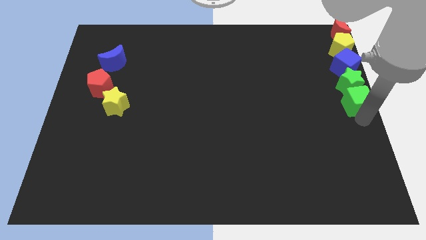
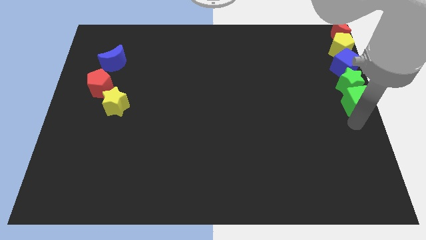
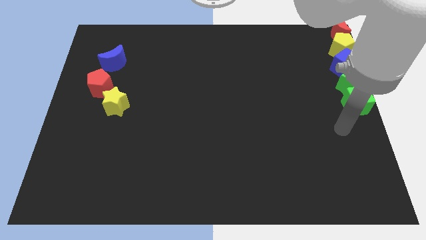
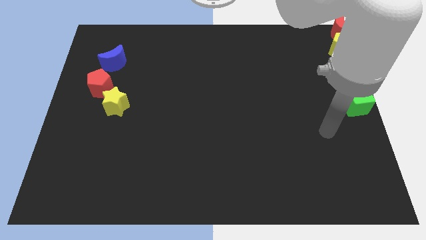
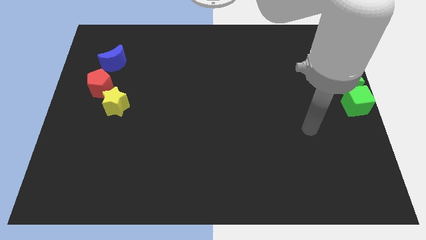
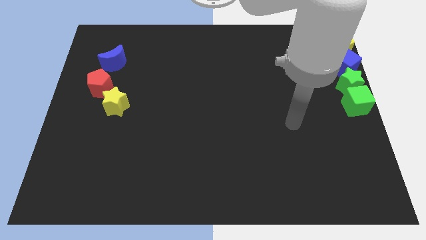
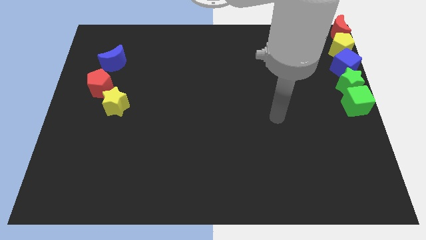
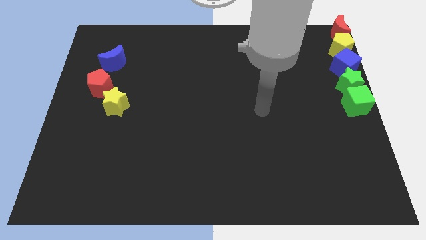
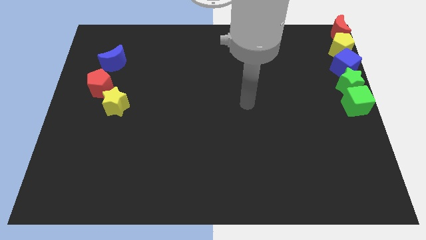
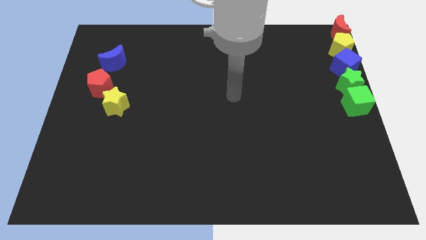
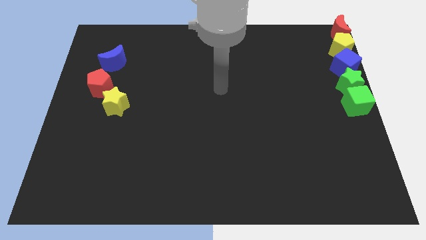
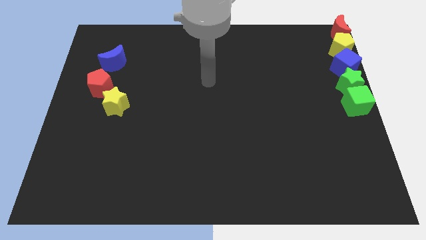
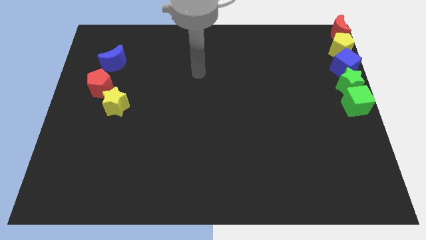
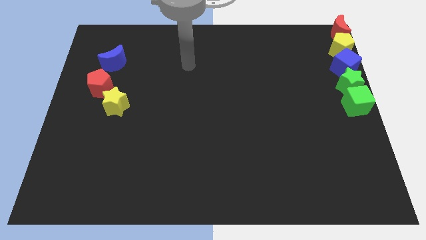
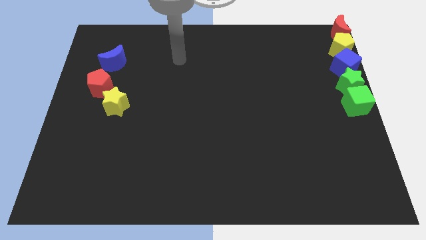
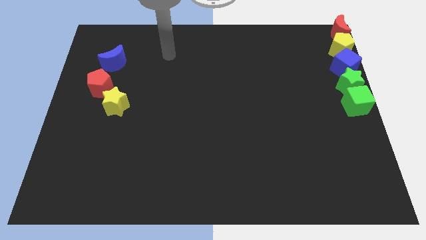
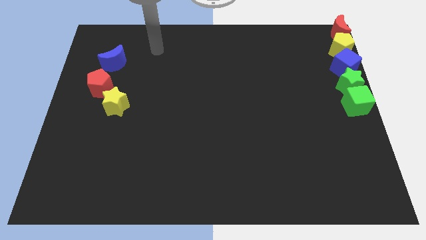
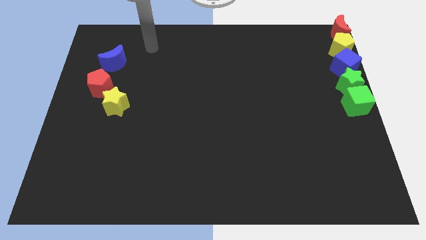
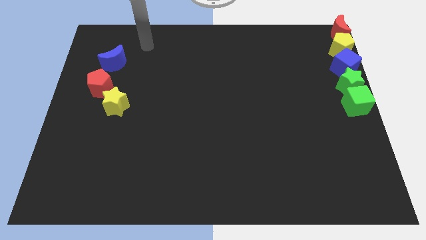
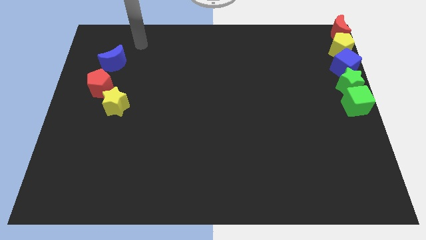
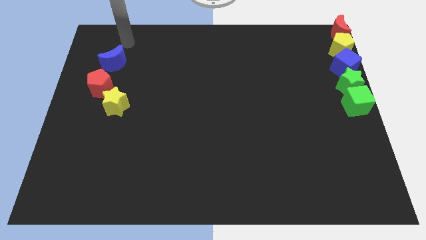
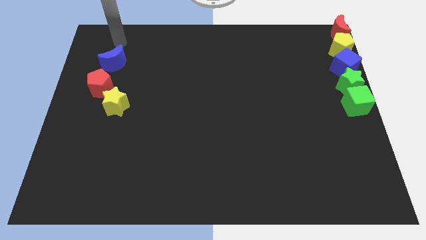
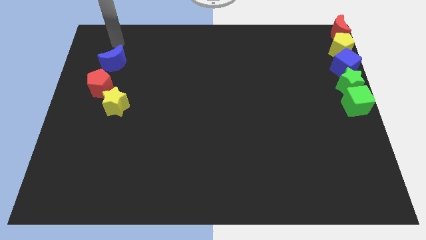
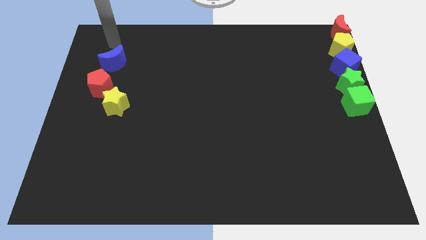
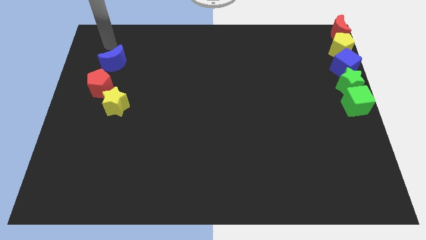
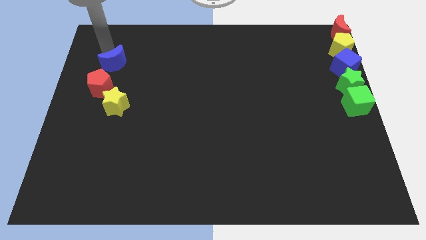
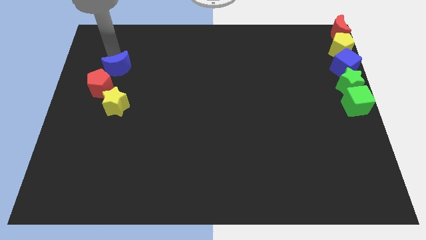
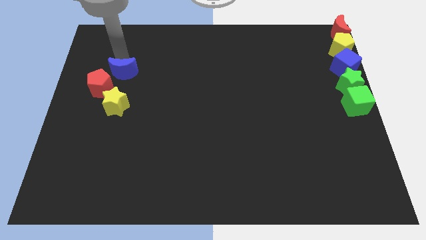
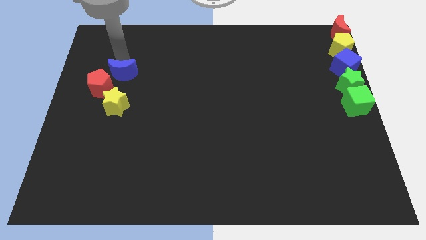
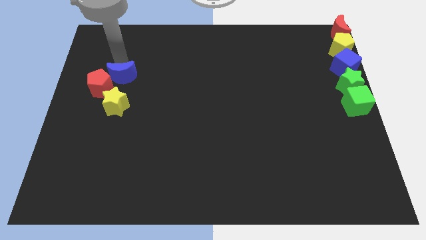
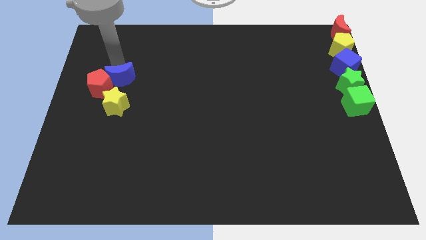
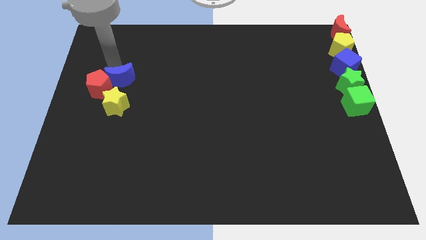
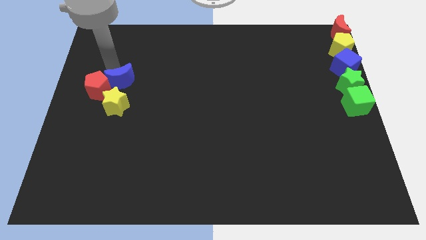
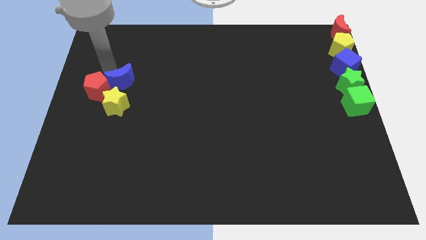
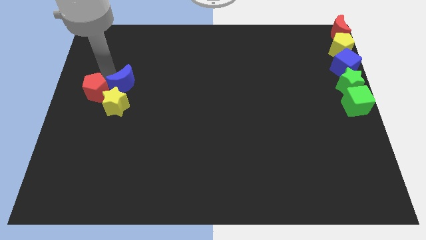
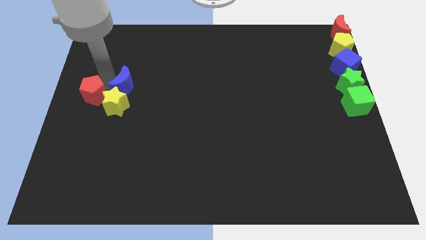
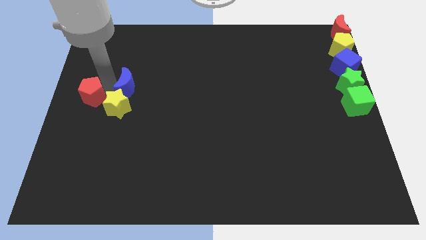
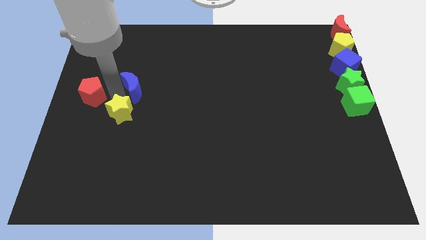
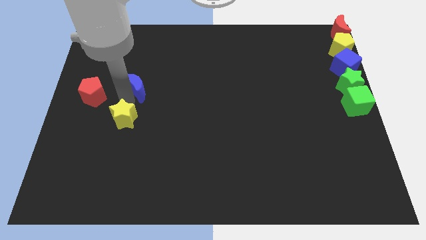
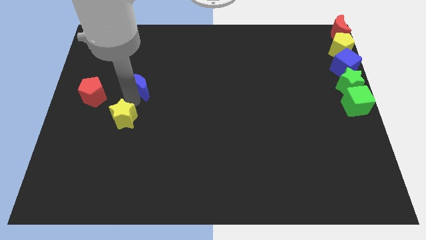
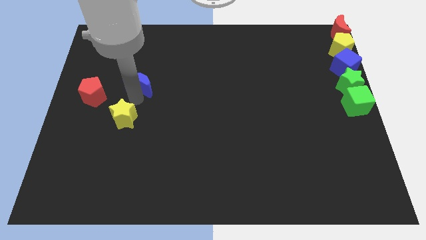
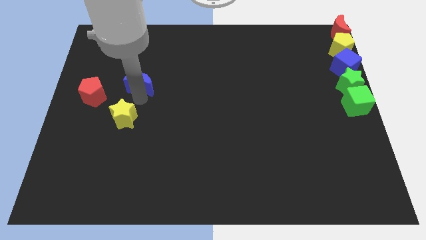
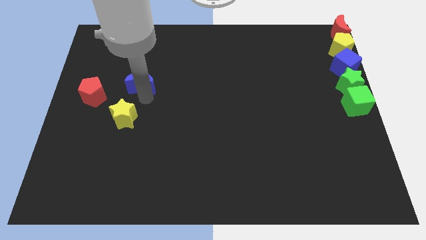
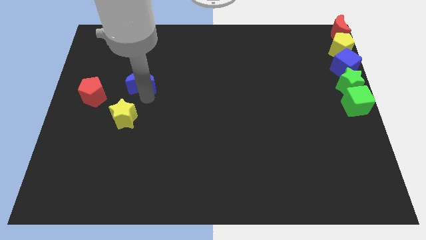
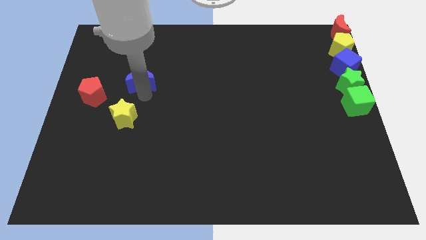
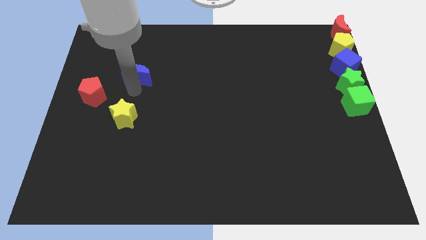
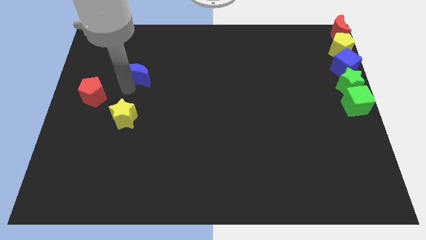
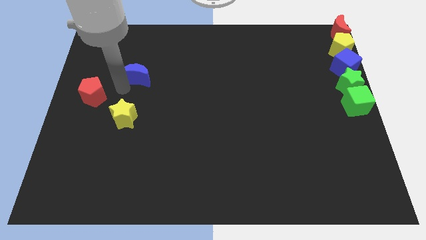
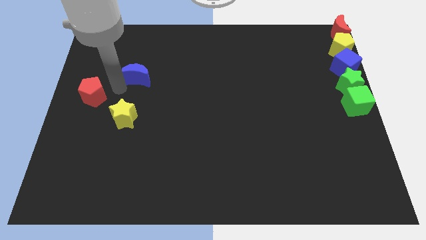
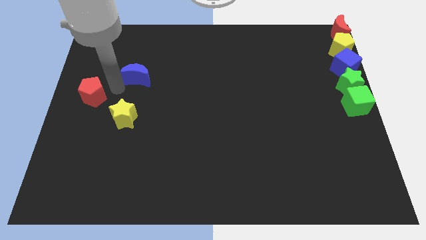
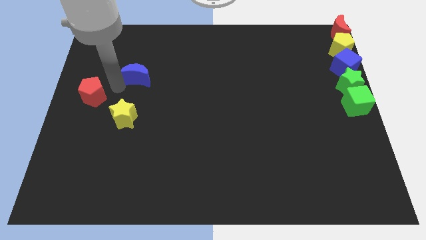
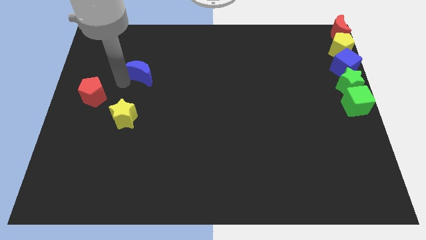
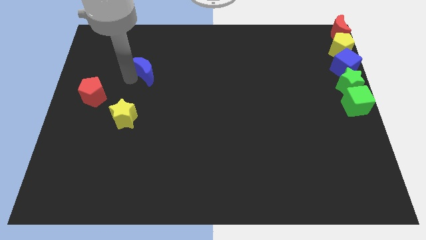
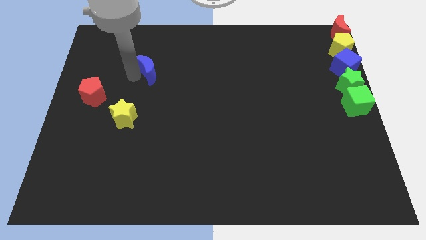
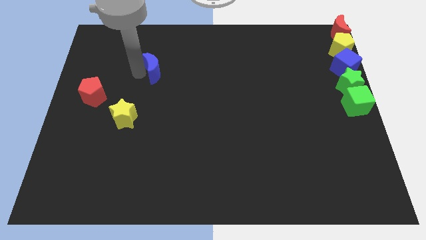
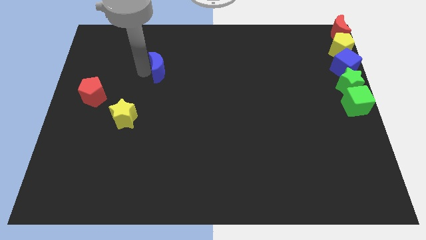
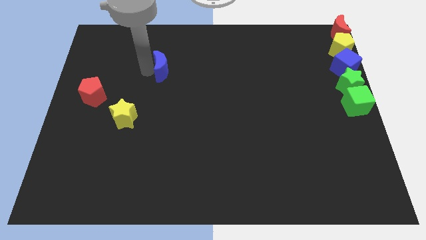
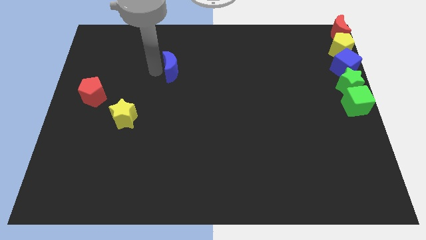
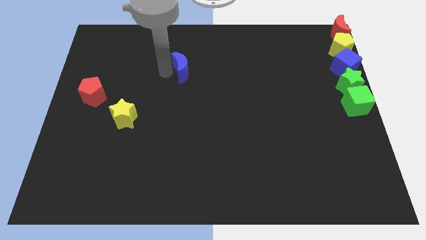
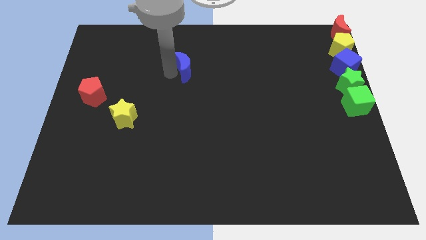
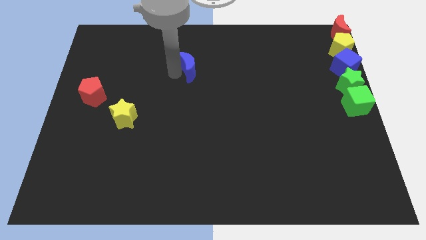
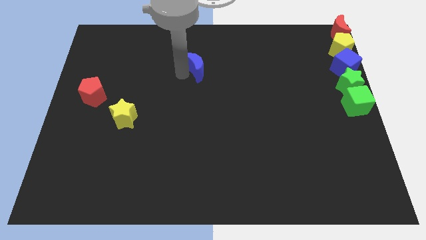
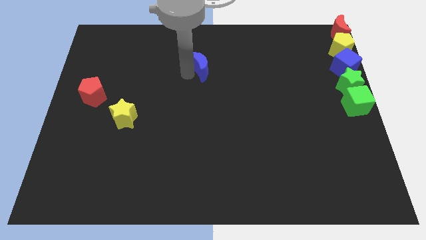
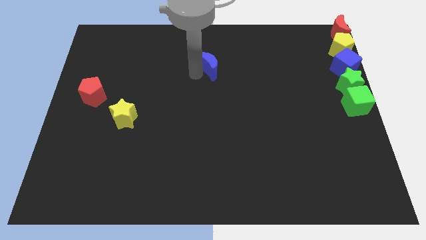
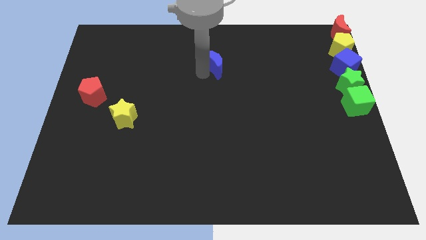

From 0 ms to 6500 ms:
place the blue cube at the top center of the board

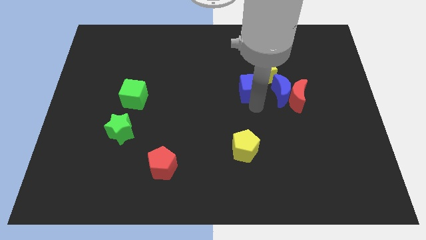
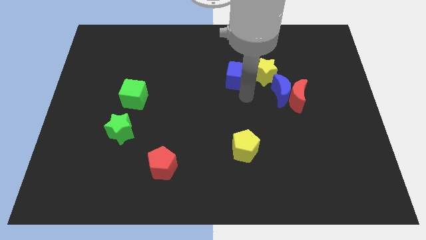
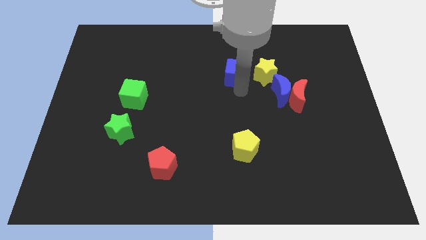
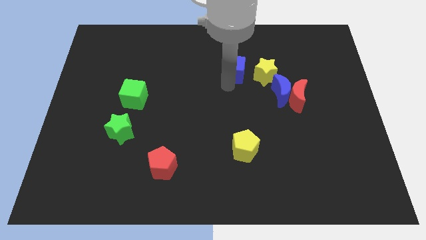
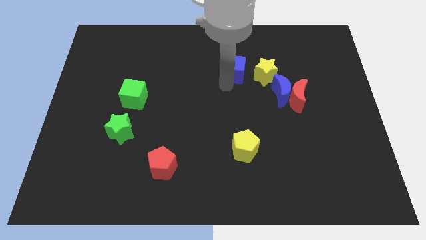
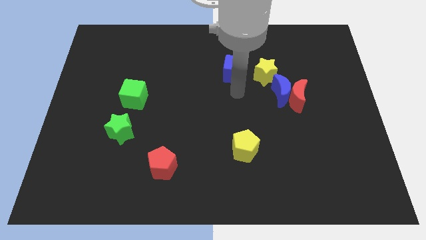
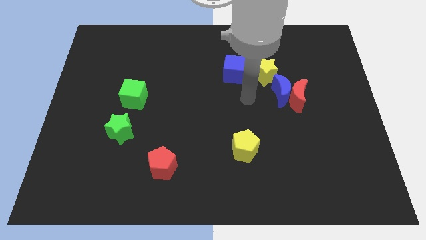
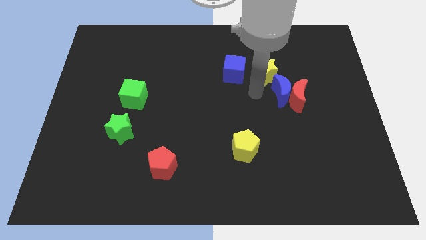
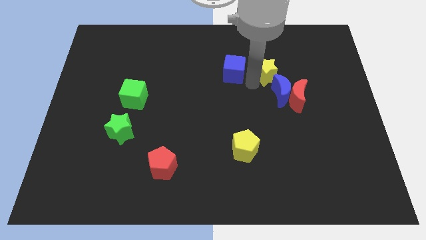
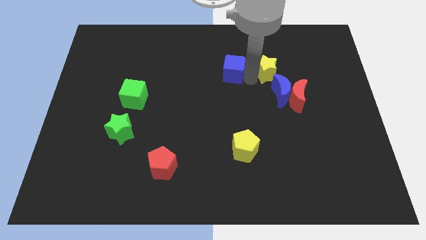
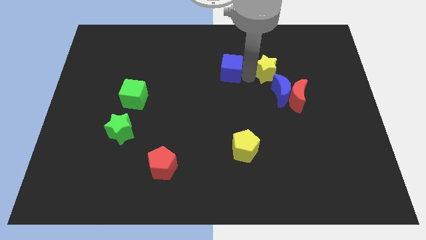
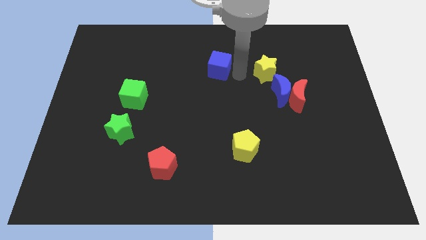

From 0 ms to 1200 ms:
place your hand in between yellow star and blue cube

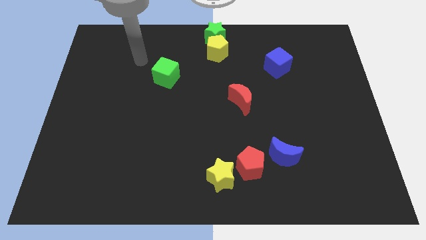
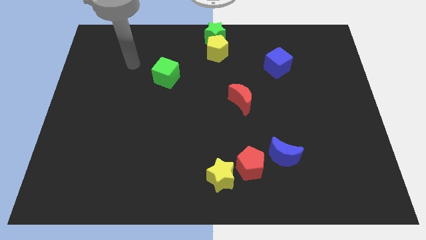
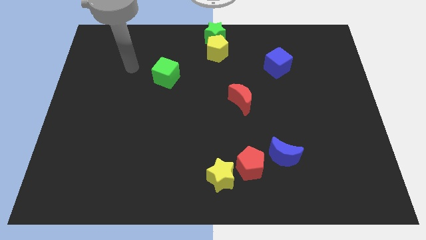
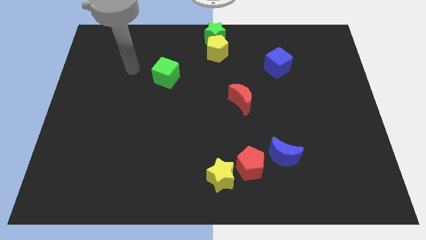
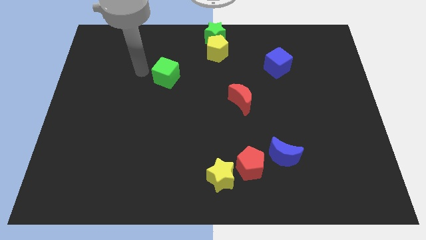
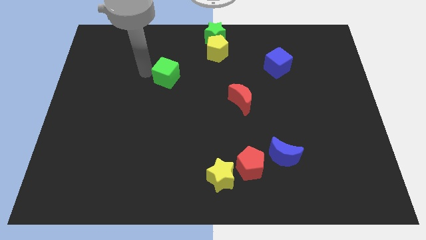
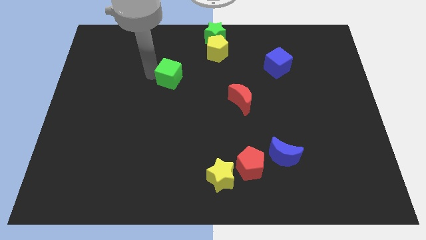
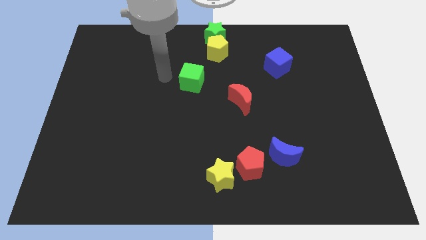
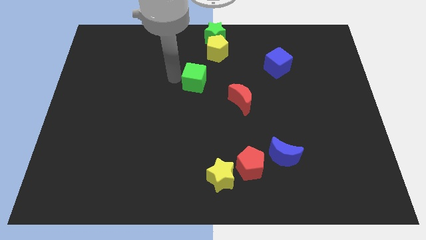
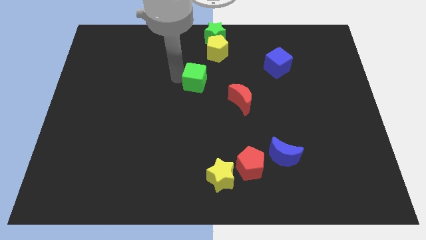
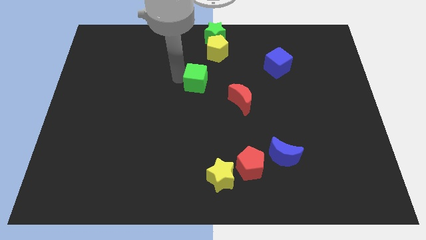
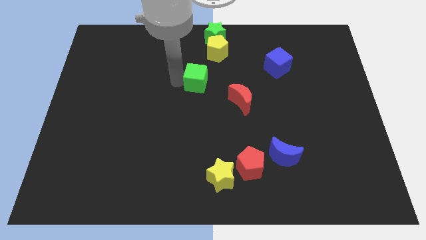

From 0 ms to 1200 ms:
push the green cube to the right

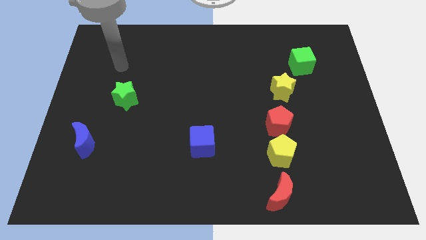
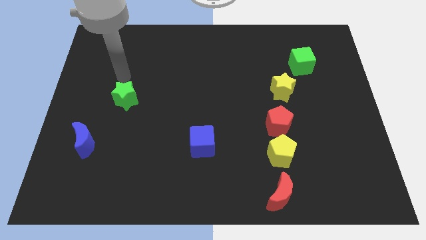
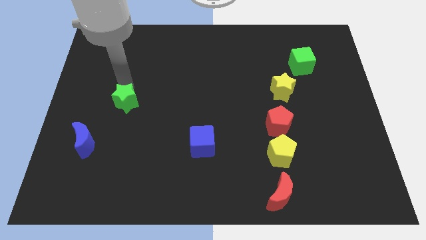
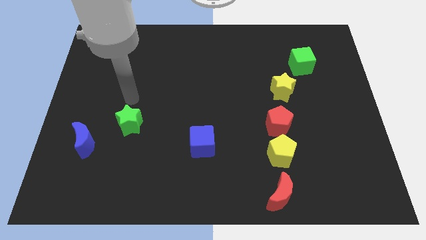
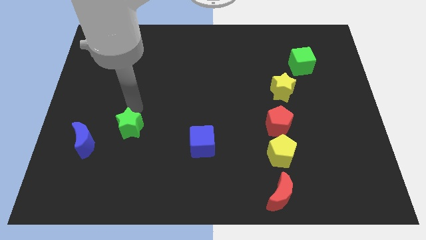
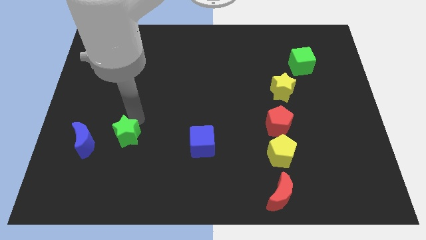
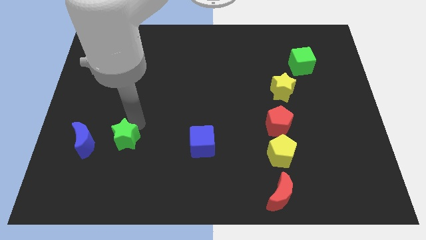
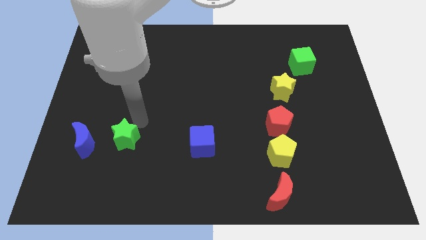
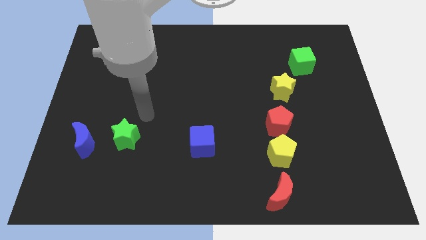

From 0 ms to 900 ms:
push green star beside blue crescent
